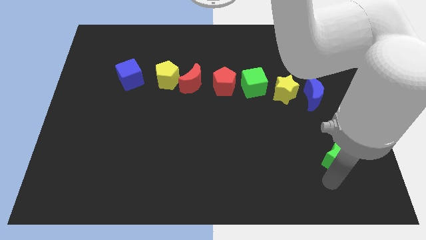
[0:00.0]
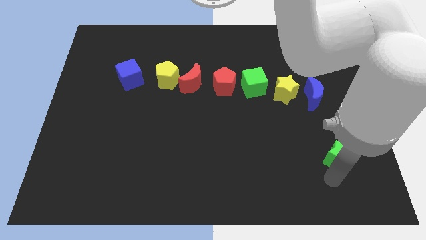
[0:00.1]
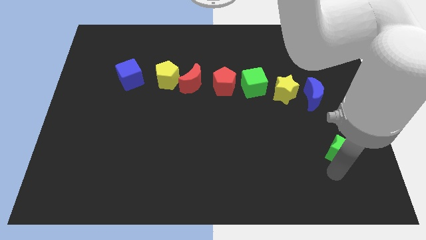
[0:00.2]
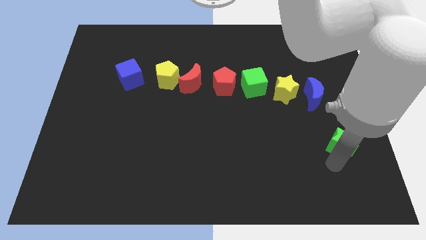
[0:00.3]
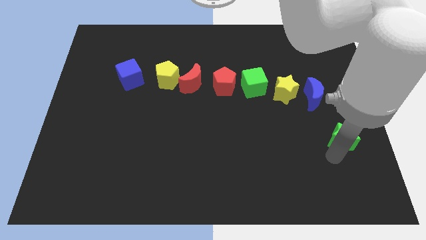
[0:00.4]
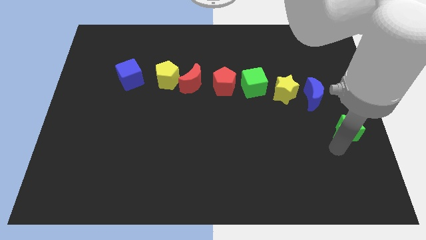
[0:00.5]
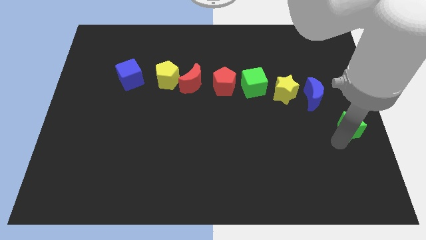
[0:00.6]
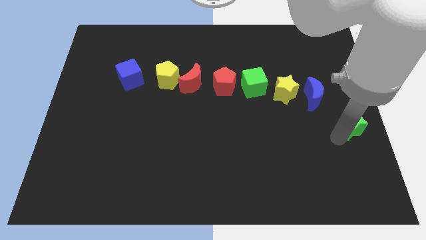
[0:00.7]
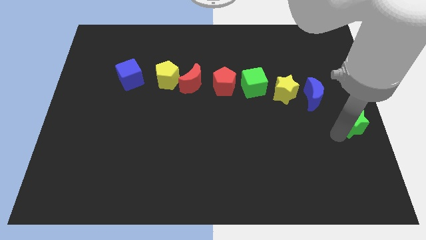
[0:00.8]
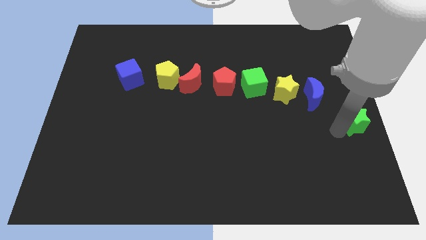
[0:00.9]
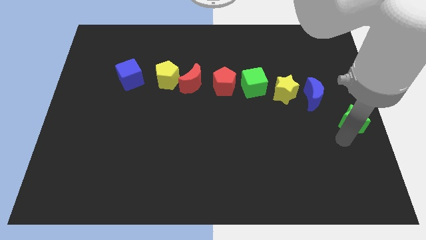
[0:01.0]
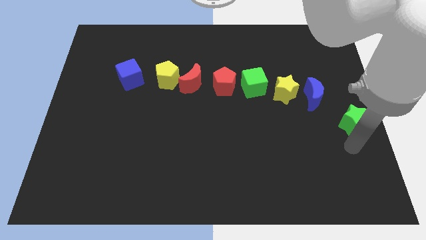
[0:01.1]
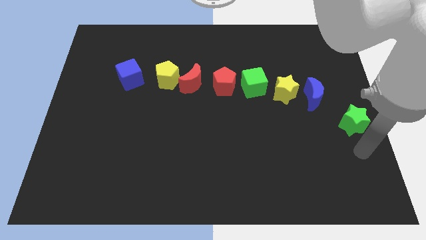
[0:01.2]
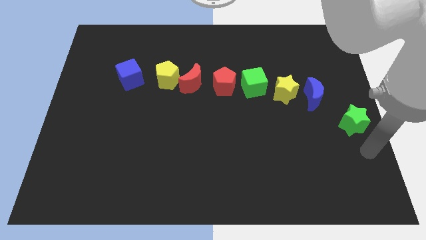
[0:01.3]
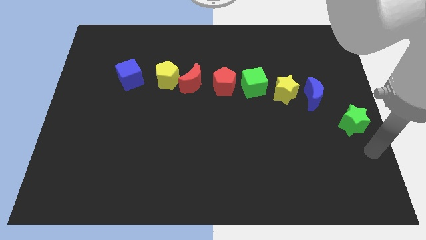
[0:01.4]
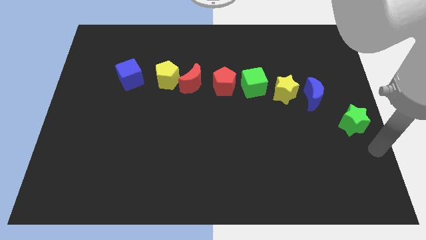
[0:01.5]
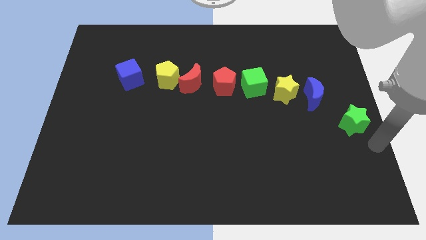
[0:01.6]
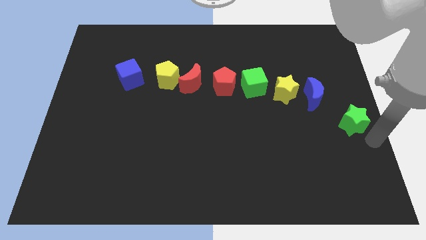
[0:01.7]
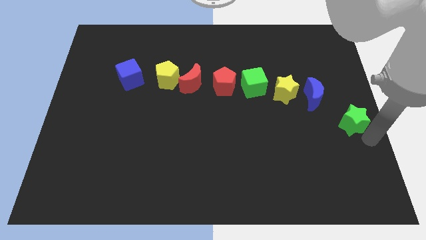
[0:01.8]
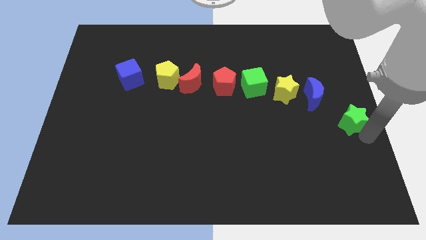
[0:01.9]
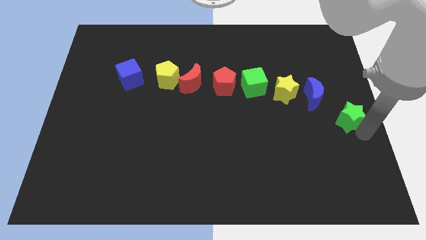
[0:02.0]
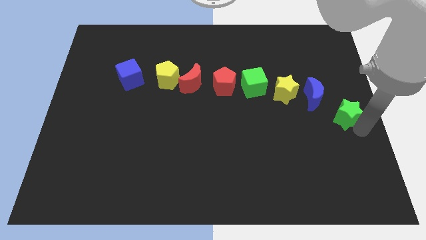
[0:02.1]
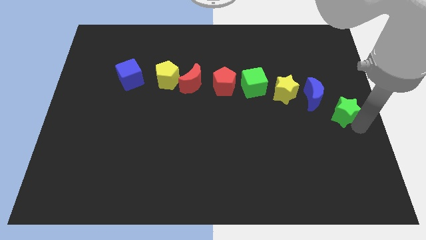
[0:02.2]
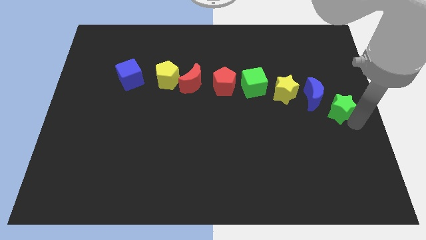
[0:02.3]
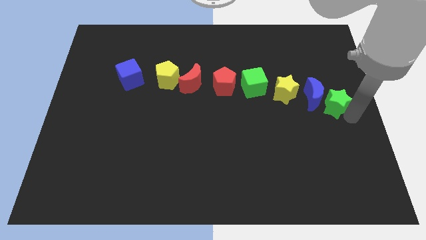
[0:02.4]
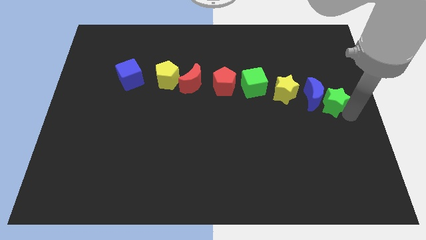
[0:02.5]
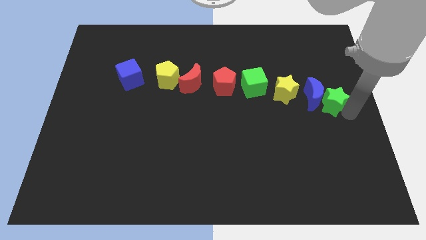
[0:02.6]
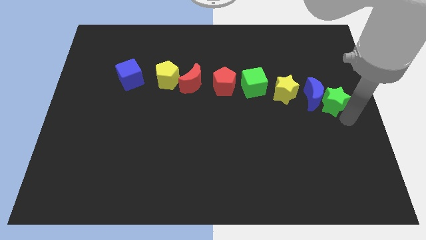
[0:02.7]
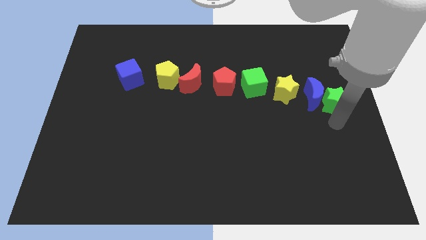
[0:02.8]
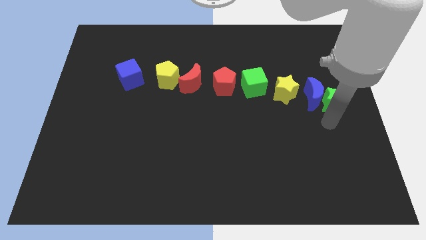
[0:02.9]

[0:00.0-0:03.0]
move the green star to the right of blue moon

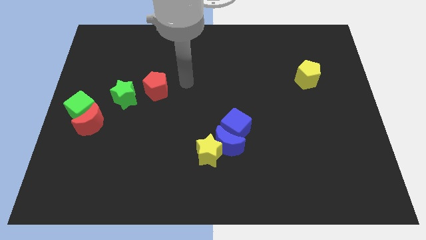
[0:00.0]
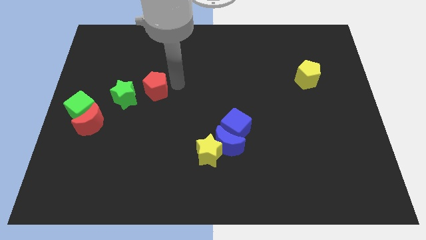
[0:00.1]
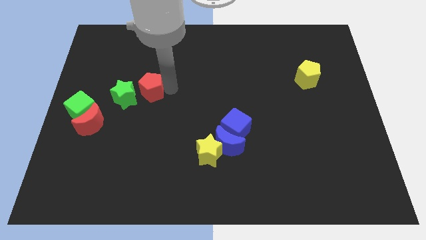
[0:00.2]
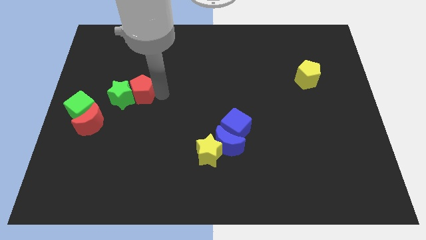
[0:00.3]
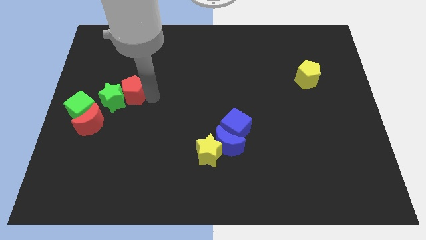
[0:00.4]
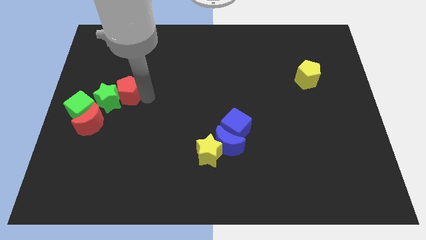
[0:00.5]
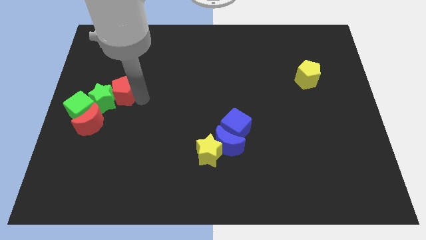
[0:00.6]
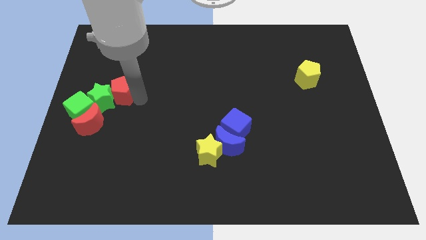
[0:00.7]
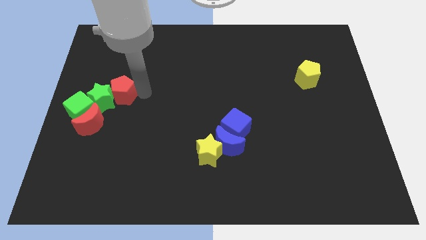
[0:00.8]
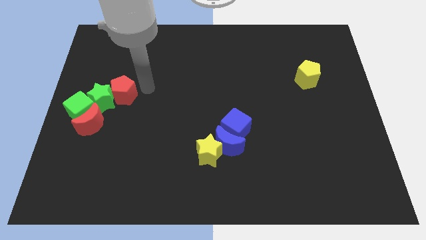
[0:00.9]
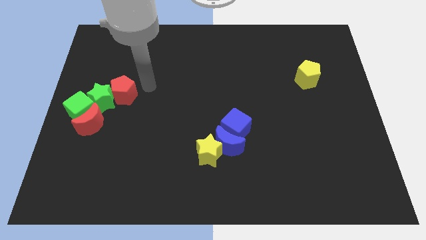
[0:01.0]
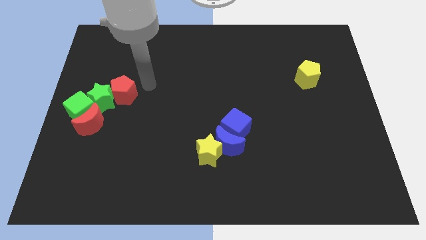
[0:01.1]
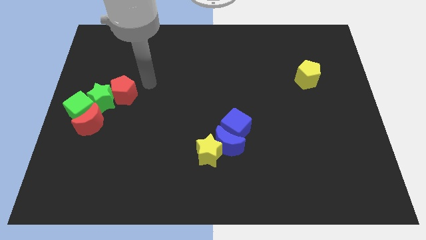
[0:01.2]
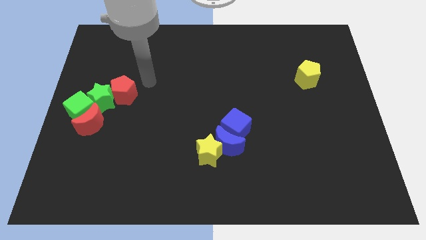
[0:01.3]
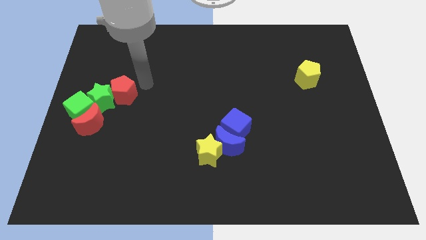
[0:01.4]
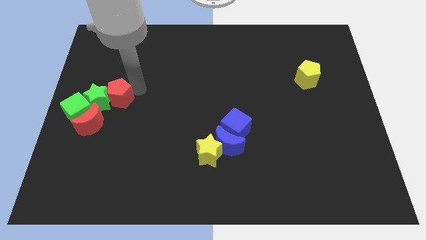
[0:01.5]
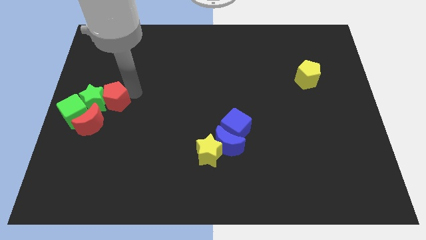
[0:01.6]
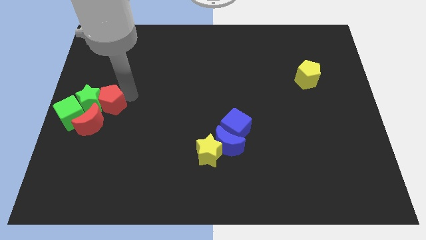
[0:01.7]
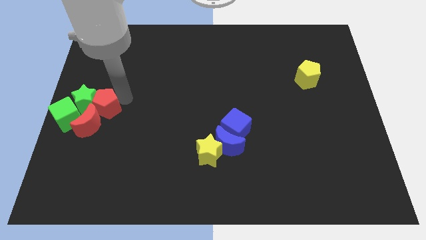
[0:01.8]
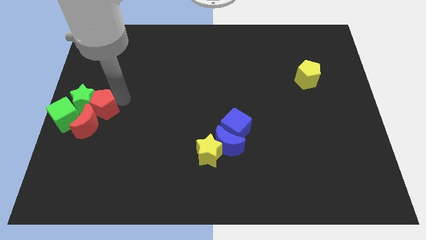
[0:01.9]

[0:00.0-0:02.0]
move red pentagon along with green star to the center left

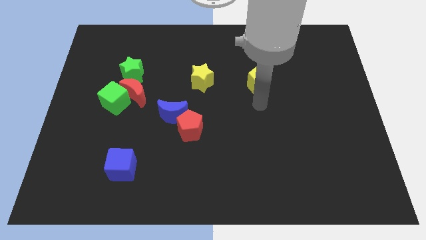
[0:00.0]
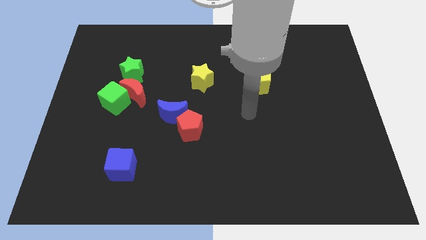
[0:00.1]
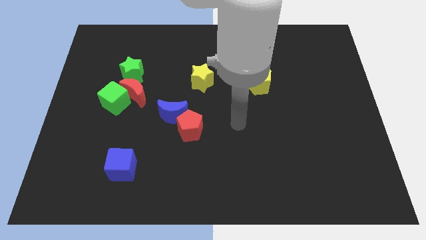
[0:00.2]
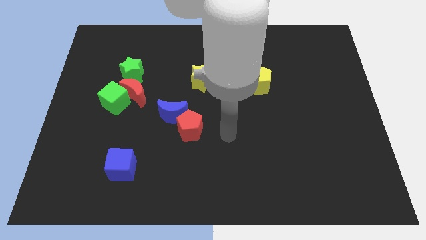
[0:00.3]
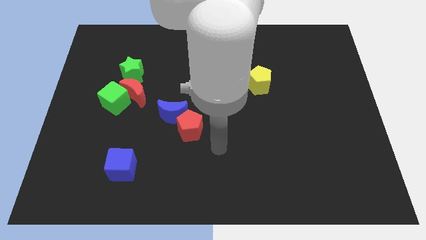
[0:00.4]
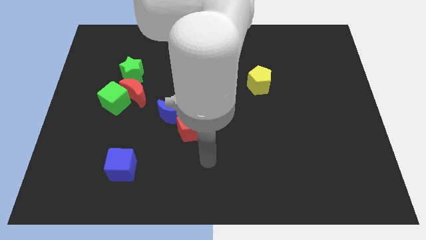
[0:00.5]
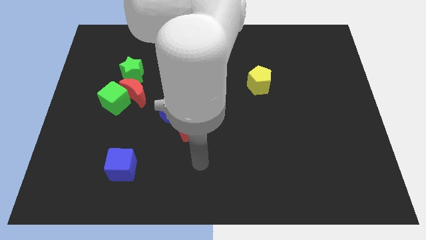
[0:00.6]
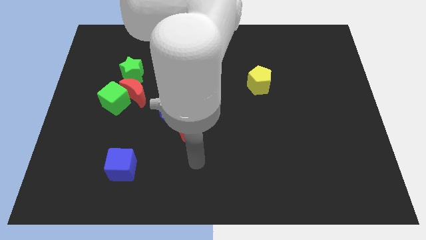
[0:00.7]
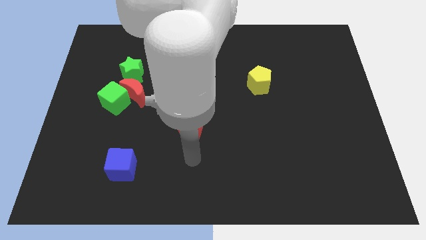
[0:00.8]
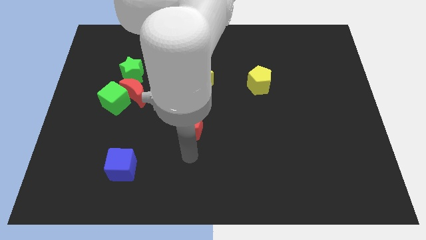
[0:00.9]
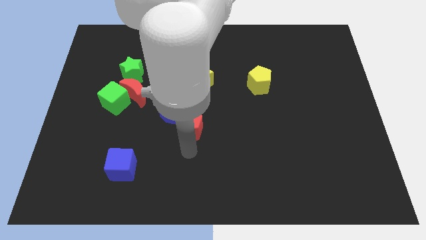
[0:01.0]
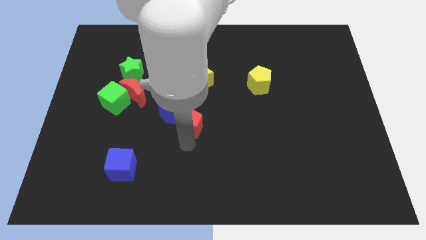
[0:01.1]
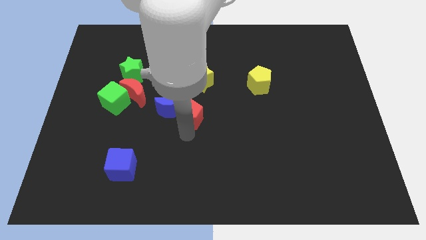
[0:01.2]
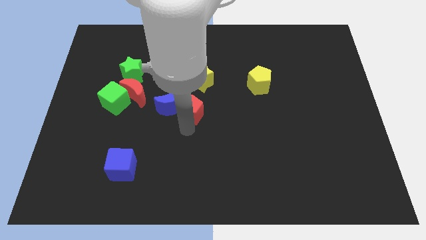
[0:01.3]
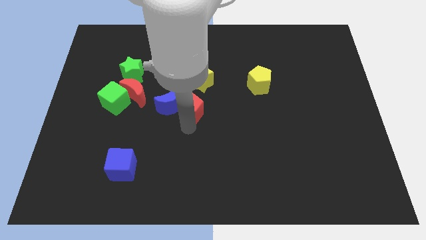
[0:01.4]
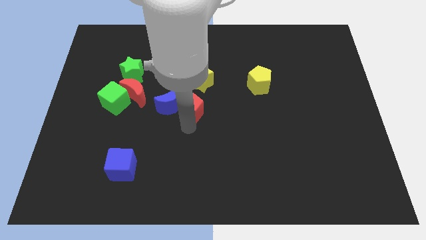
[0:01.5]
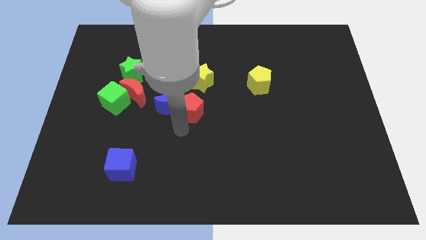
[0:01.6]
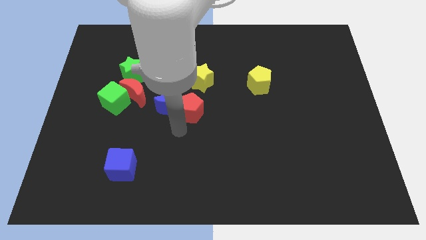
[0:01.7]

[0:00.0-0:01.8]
move the red pentagon to the right of the blue crescent

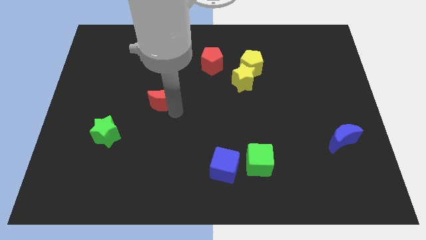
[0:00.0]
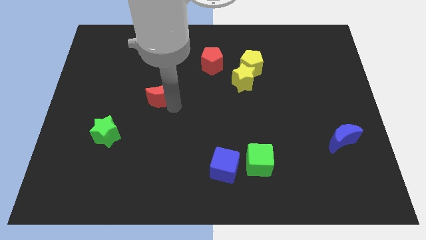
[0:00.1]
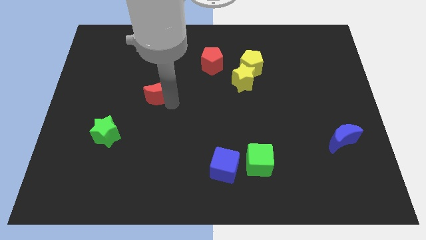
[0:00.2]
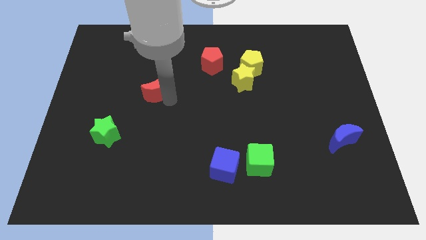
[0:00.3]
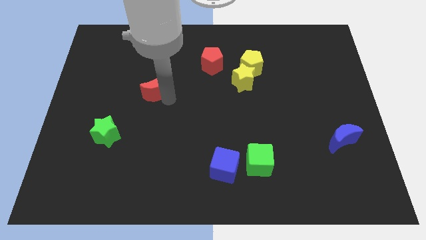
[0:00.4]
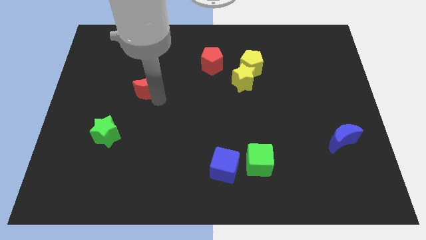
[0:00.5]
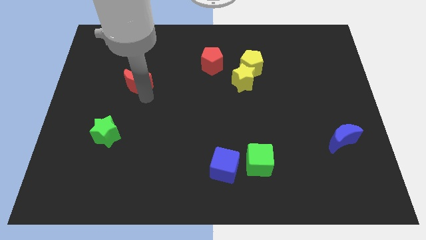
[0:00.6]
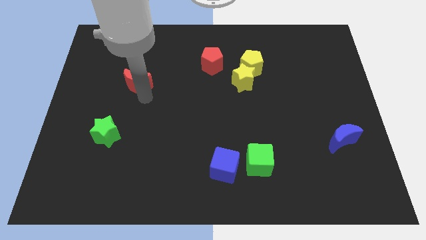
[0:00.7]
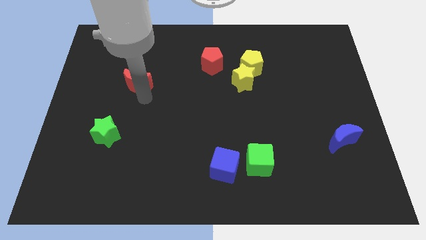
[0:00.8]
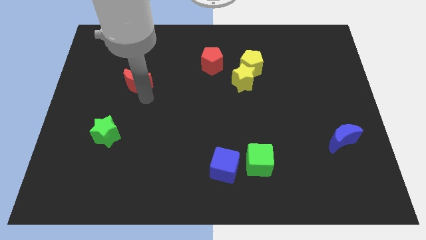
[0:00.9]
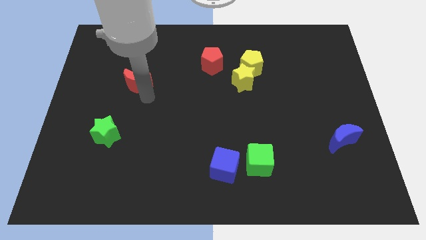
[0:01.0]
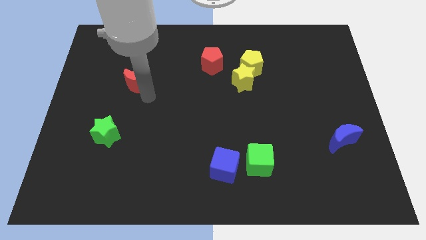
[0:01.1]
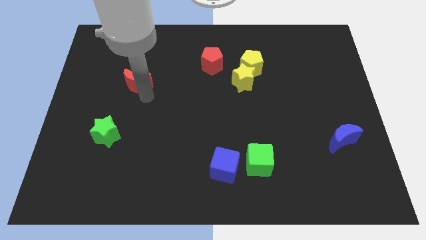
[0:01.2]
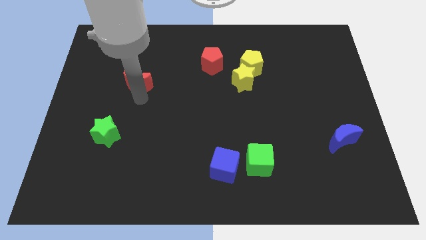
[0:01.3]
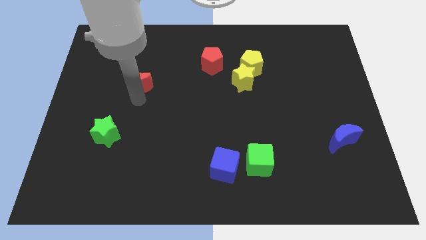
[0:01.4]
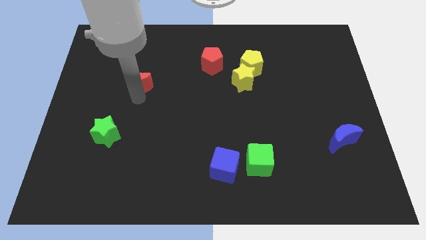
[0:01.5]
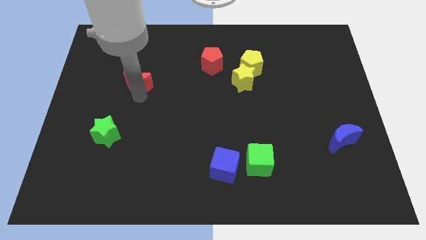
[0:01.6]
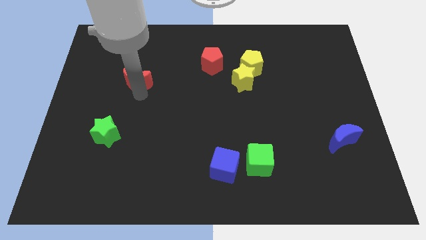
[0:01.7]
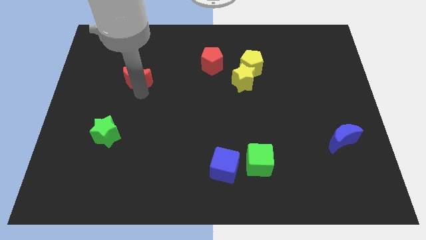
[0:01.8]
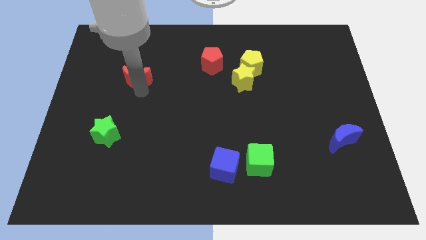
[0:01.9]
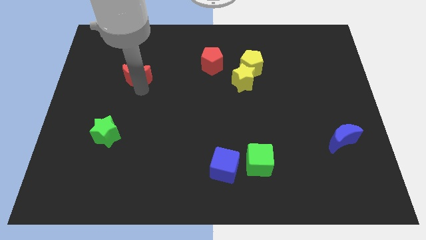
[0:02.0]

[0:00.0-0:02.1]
push the red crescent to the top of the green star
